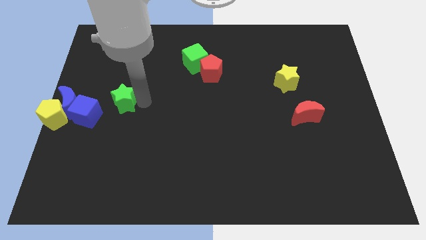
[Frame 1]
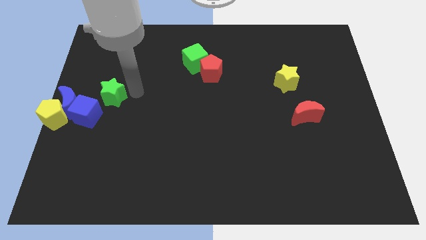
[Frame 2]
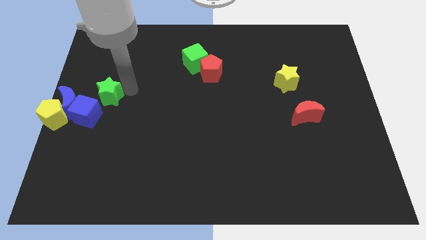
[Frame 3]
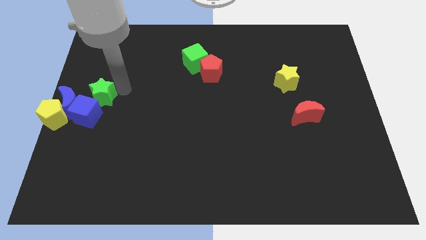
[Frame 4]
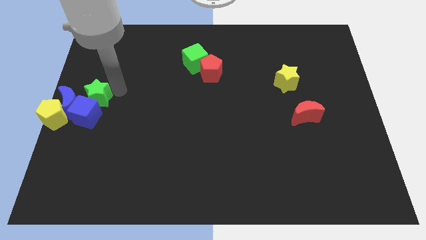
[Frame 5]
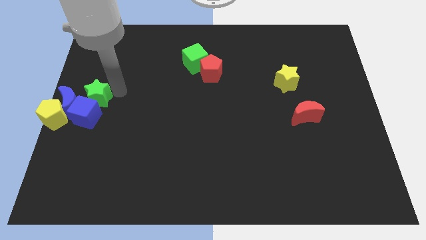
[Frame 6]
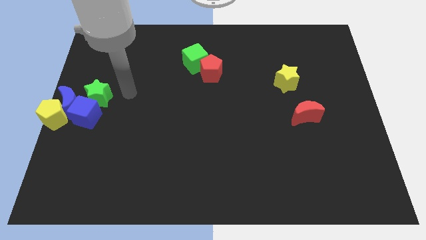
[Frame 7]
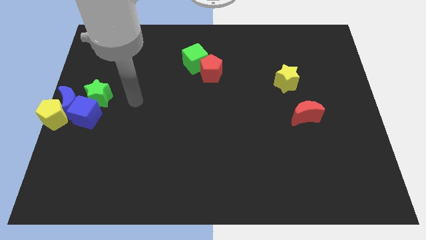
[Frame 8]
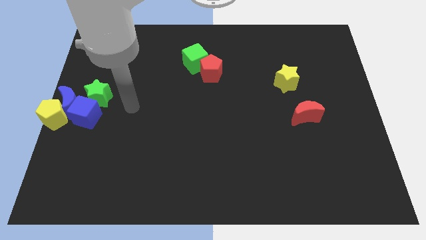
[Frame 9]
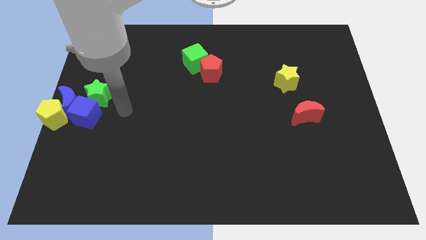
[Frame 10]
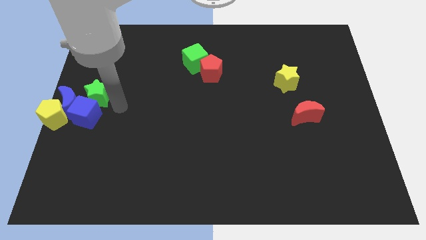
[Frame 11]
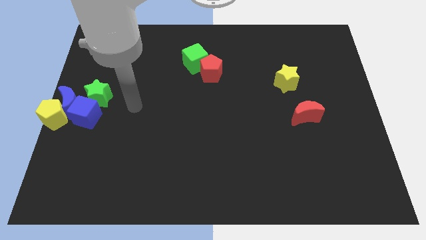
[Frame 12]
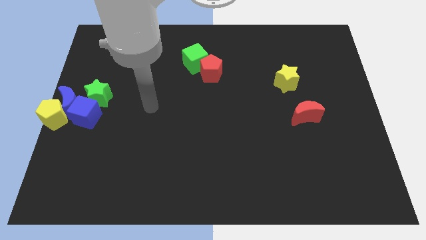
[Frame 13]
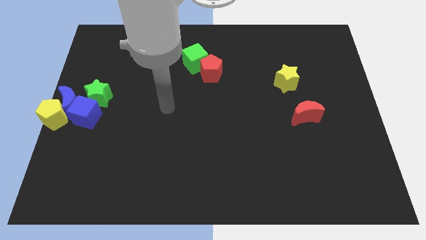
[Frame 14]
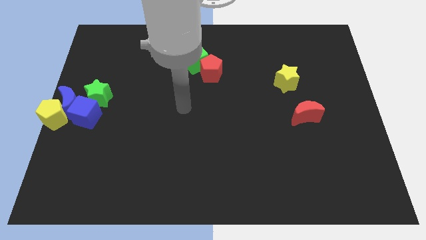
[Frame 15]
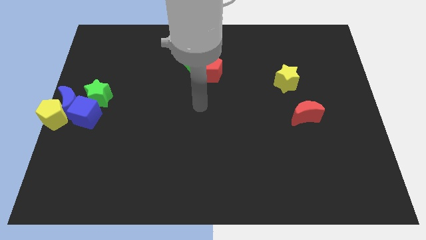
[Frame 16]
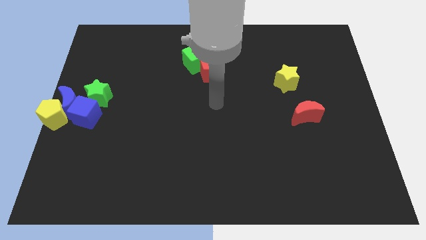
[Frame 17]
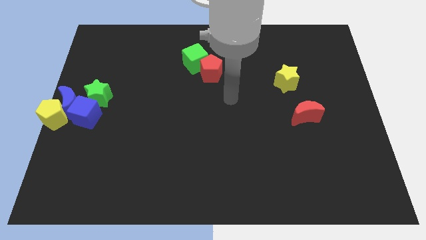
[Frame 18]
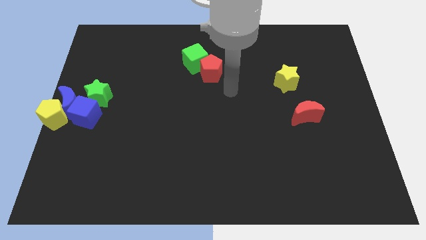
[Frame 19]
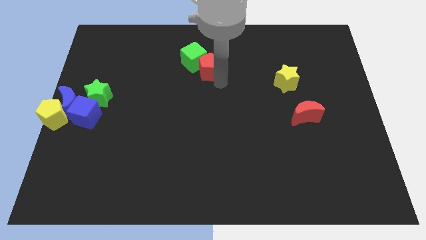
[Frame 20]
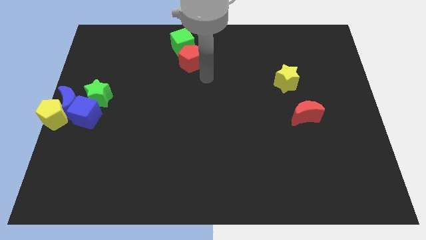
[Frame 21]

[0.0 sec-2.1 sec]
place the green star above the blue cube

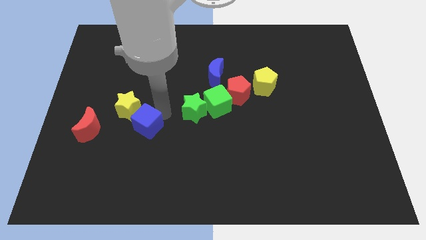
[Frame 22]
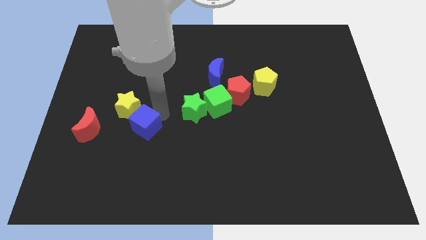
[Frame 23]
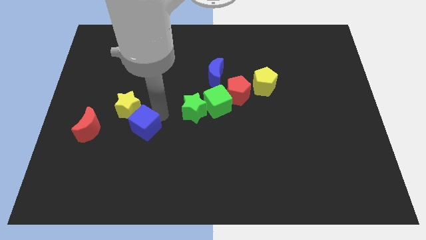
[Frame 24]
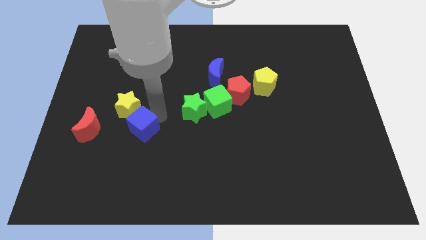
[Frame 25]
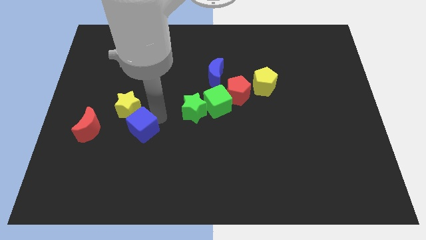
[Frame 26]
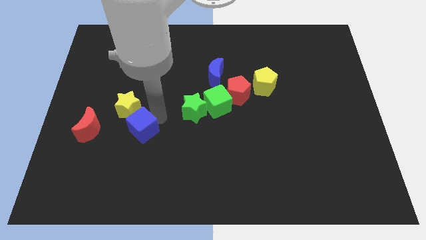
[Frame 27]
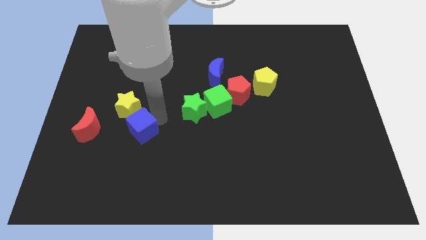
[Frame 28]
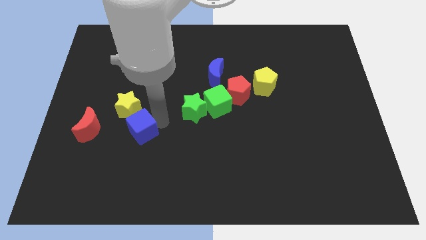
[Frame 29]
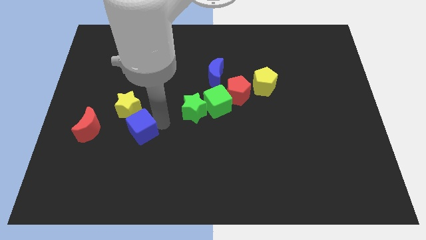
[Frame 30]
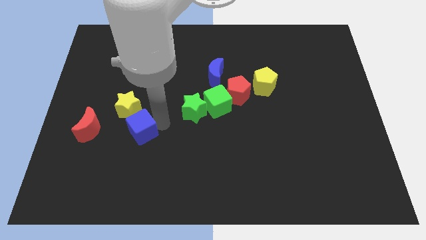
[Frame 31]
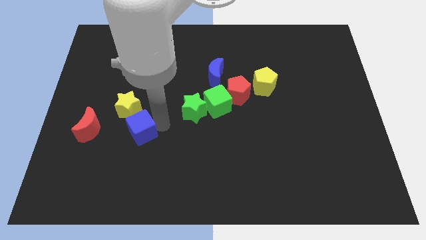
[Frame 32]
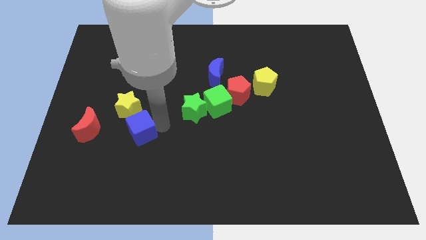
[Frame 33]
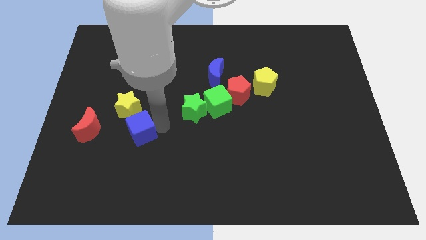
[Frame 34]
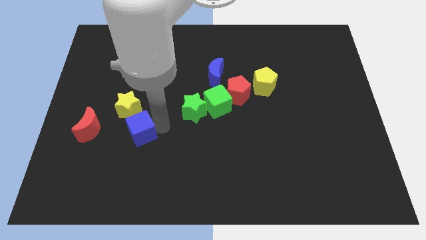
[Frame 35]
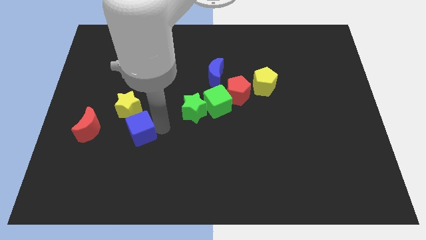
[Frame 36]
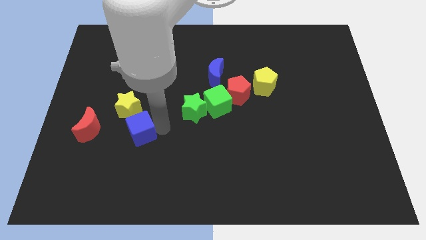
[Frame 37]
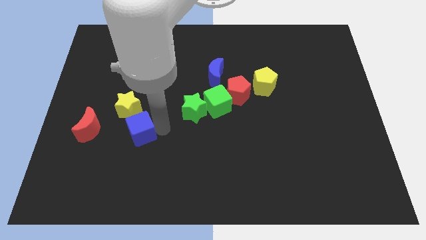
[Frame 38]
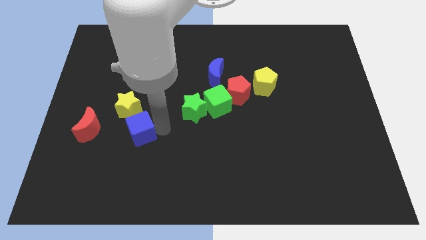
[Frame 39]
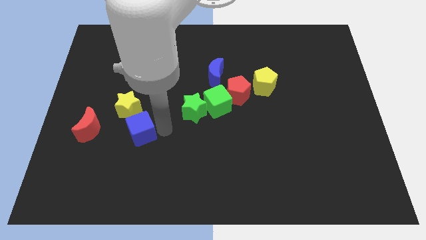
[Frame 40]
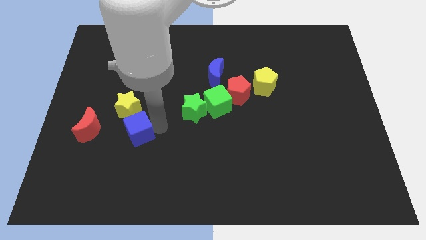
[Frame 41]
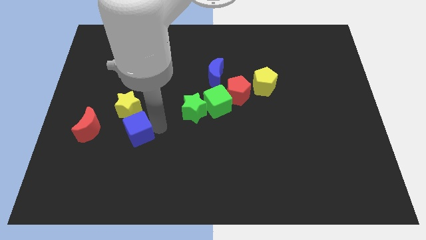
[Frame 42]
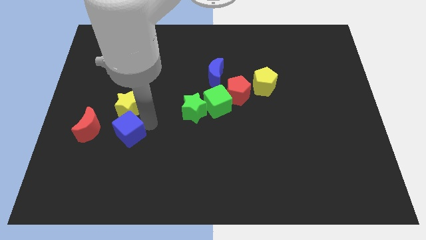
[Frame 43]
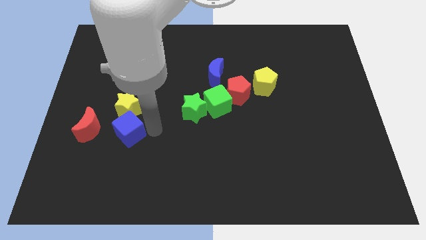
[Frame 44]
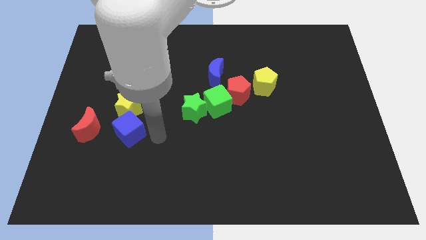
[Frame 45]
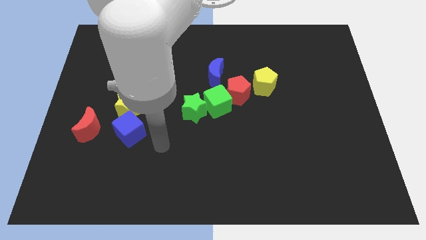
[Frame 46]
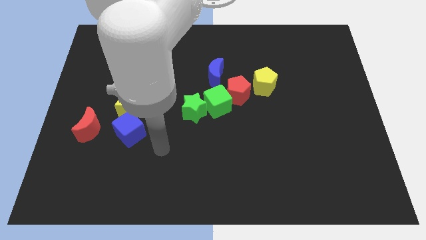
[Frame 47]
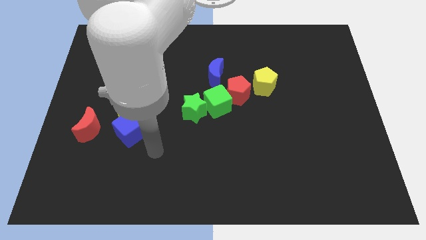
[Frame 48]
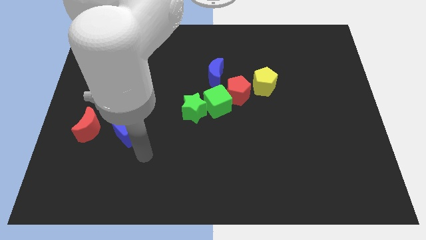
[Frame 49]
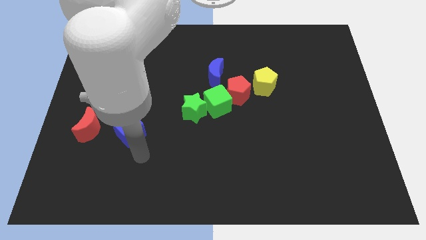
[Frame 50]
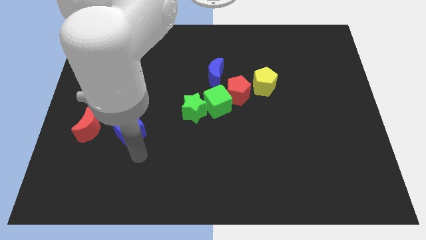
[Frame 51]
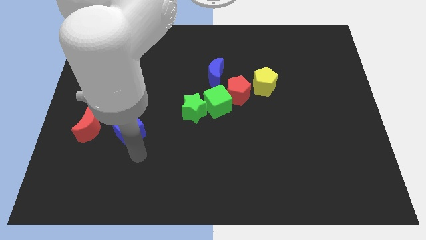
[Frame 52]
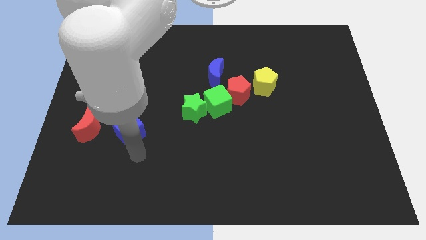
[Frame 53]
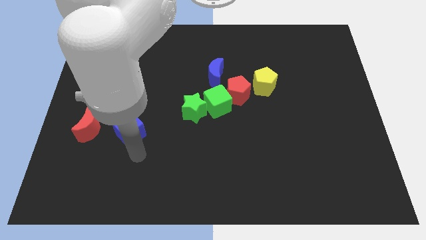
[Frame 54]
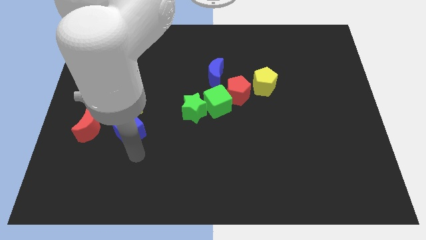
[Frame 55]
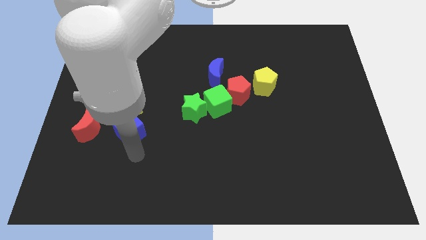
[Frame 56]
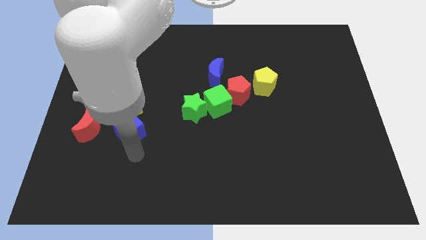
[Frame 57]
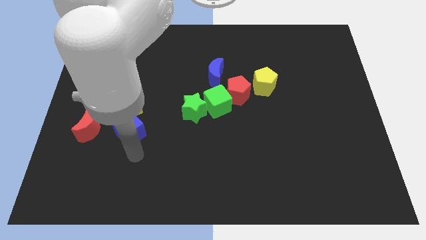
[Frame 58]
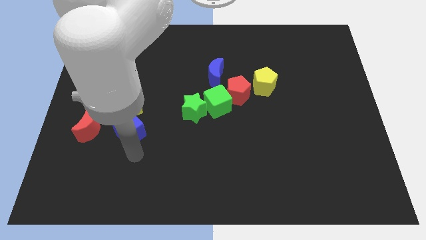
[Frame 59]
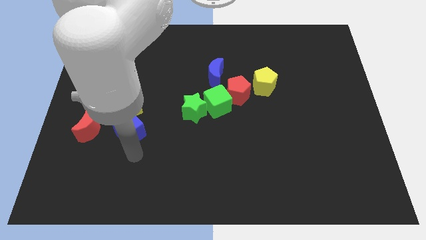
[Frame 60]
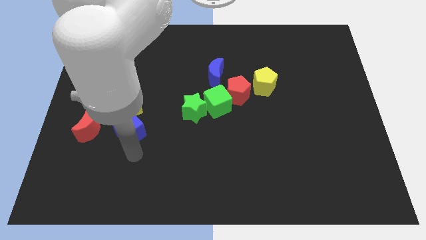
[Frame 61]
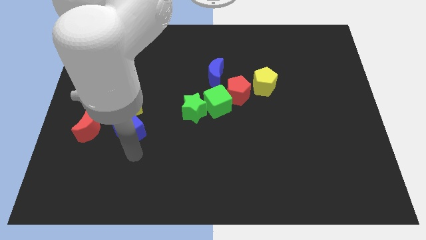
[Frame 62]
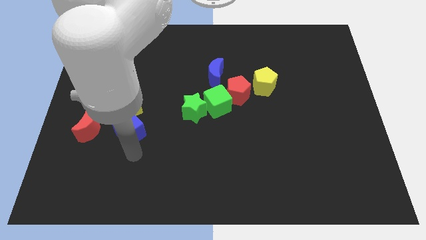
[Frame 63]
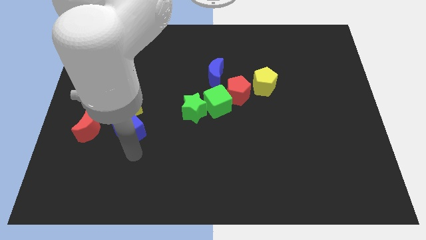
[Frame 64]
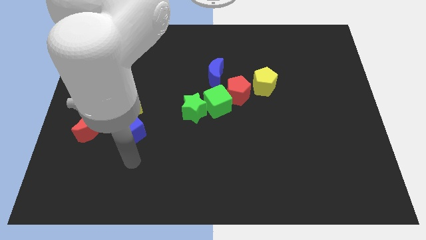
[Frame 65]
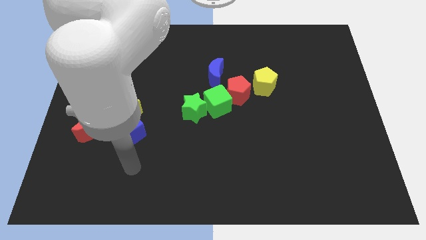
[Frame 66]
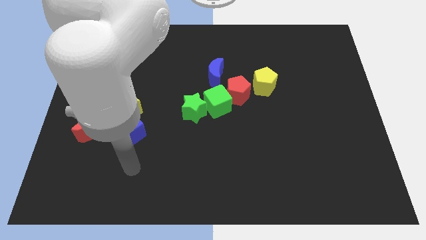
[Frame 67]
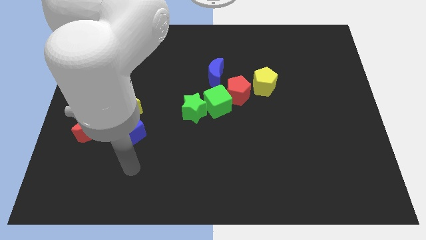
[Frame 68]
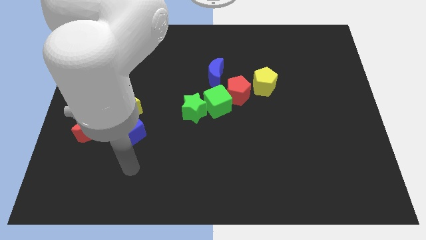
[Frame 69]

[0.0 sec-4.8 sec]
put the blue cube at the bottom of yellow star

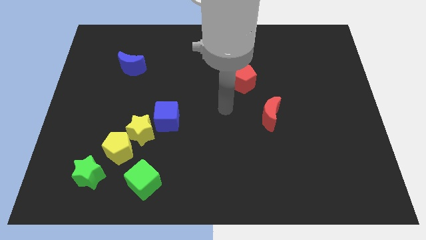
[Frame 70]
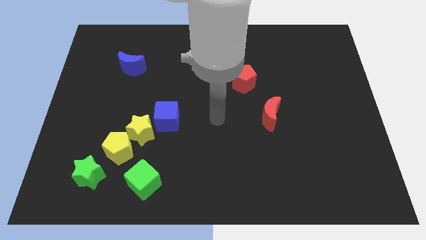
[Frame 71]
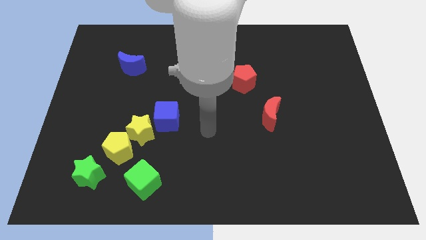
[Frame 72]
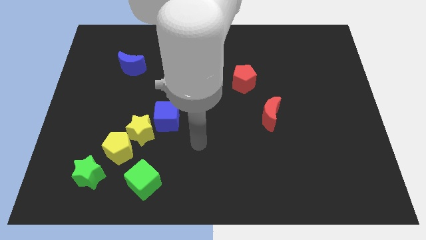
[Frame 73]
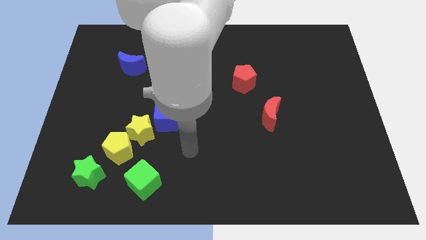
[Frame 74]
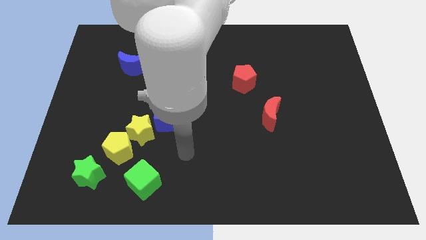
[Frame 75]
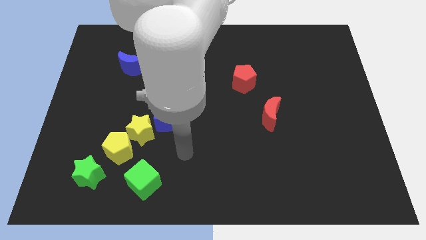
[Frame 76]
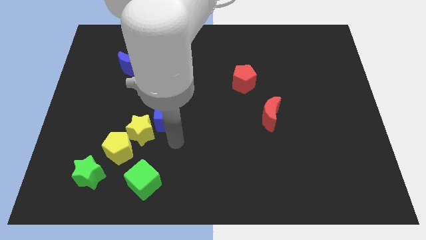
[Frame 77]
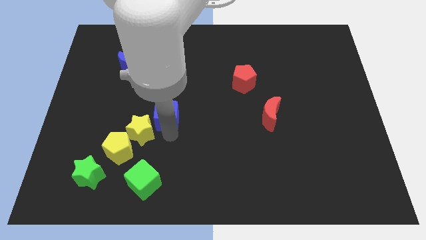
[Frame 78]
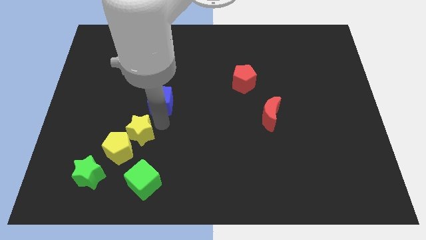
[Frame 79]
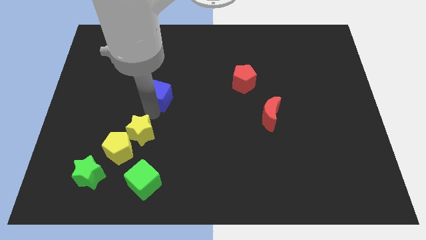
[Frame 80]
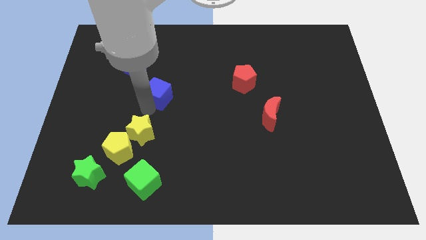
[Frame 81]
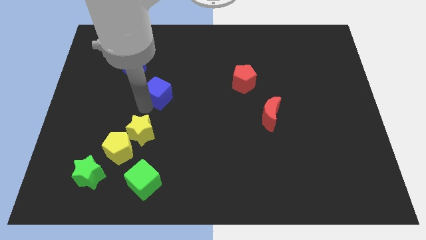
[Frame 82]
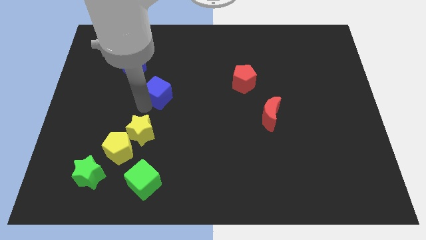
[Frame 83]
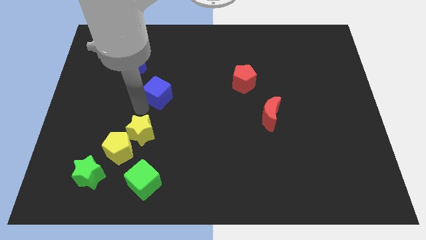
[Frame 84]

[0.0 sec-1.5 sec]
push the blue cube up slightly

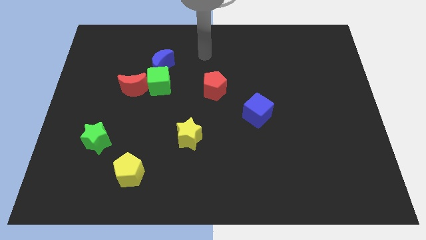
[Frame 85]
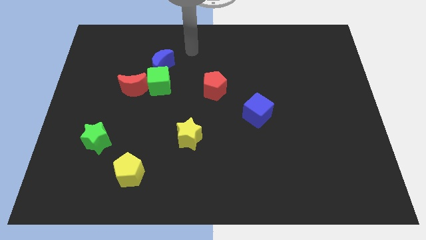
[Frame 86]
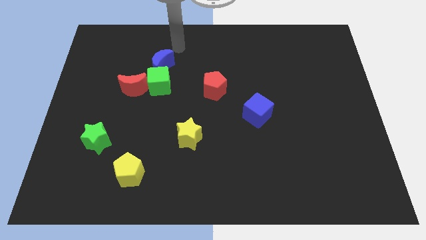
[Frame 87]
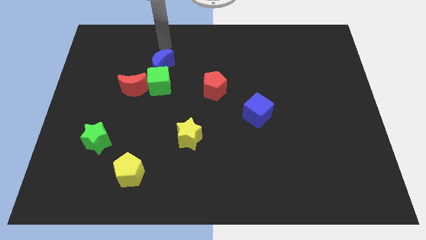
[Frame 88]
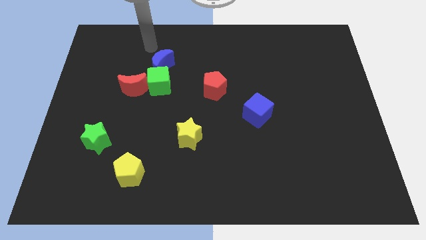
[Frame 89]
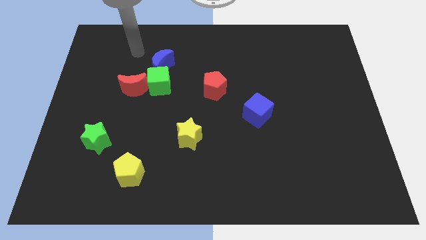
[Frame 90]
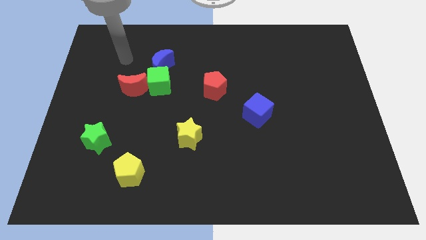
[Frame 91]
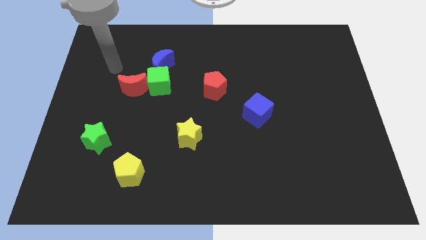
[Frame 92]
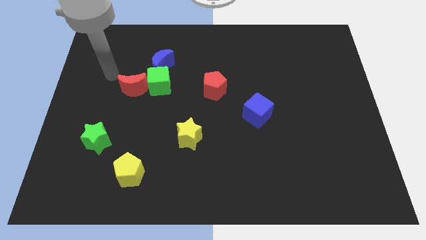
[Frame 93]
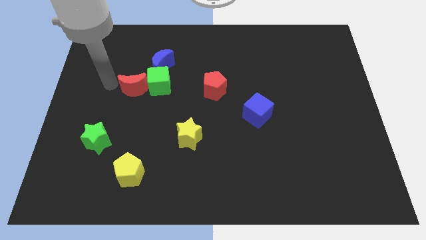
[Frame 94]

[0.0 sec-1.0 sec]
move your arm to the left side of the red moon
